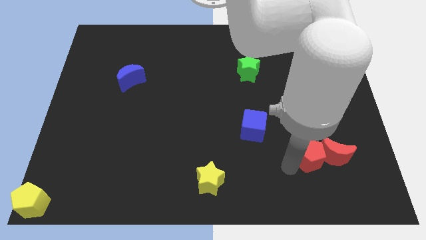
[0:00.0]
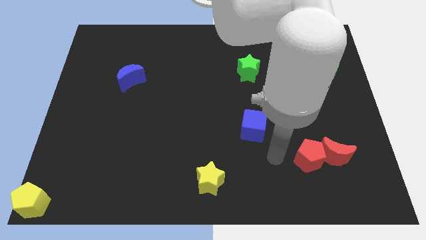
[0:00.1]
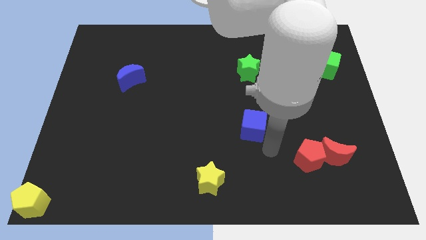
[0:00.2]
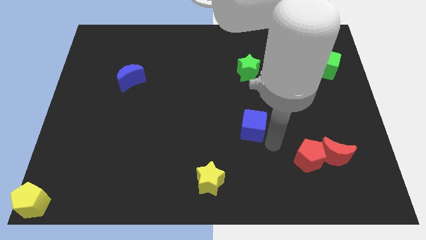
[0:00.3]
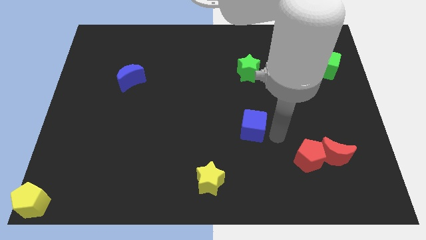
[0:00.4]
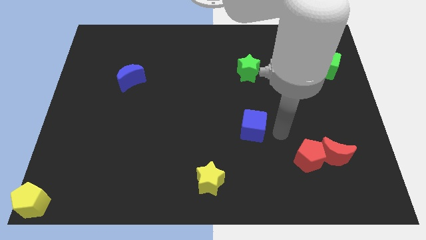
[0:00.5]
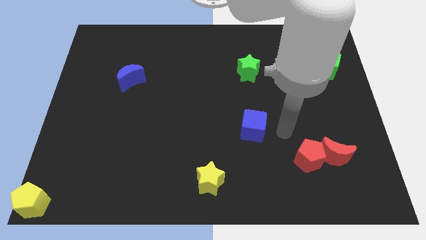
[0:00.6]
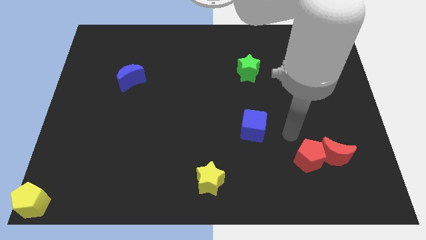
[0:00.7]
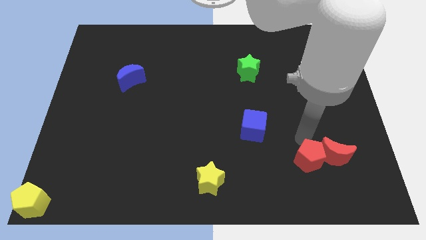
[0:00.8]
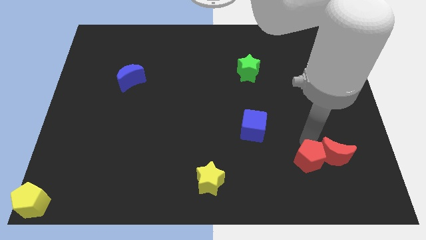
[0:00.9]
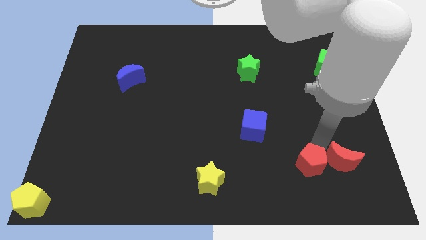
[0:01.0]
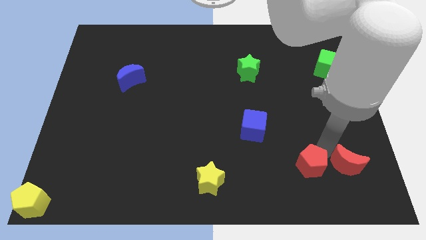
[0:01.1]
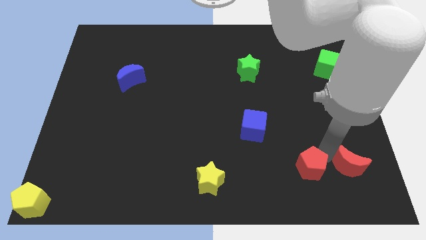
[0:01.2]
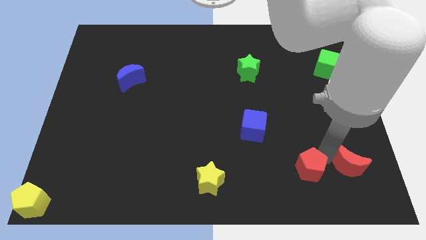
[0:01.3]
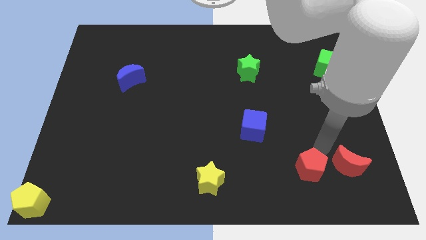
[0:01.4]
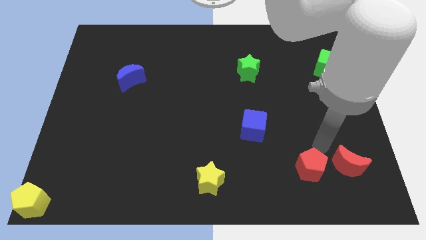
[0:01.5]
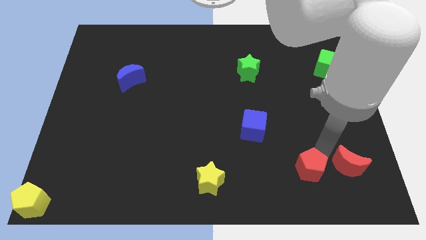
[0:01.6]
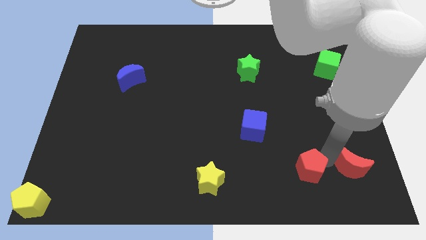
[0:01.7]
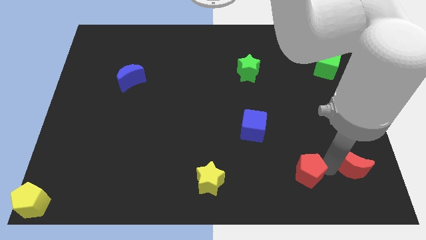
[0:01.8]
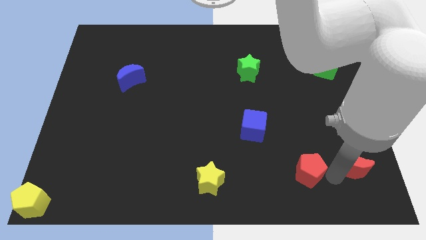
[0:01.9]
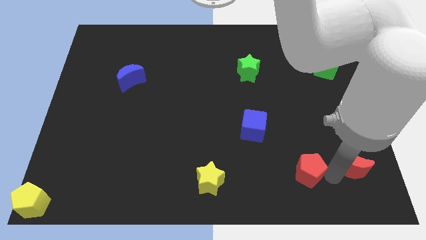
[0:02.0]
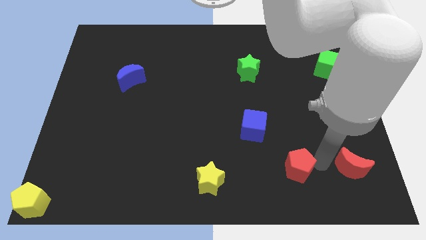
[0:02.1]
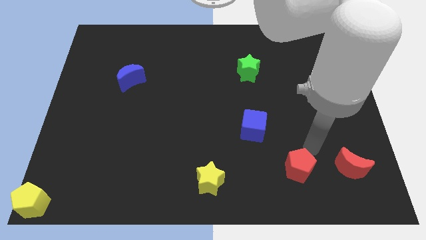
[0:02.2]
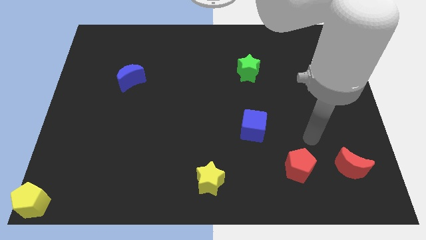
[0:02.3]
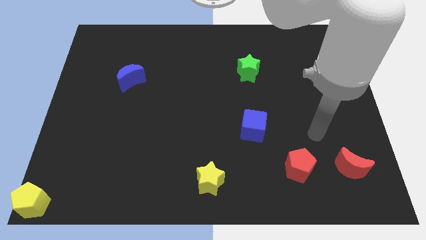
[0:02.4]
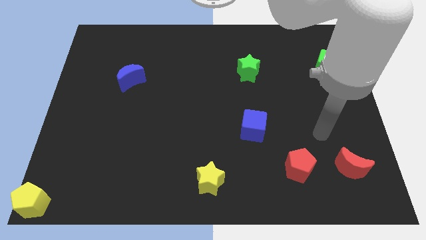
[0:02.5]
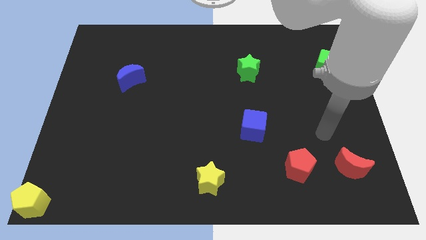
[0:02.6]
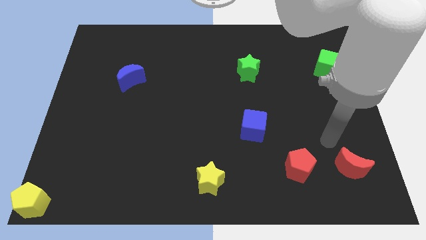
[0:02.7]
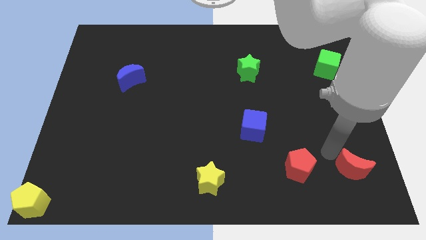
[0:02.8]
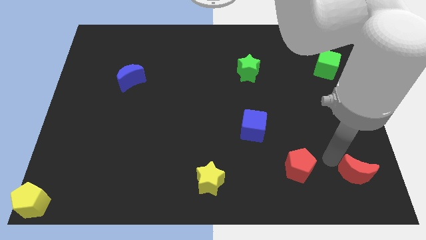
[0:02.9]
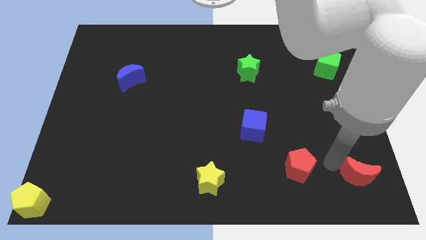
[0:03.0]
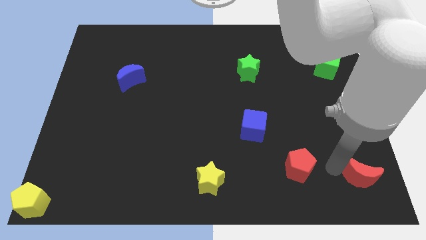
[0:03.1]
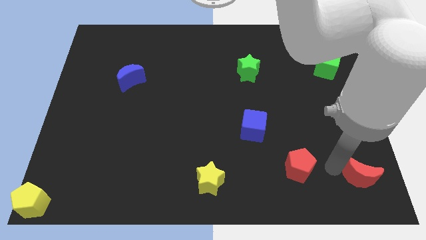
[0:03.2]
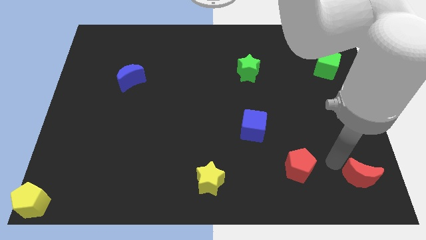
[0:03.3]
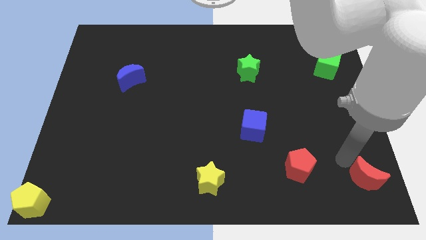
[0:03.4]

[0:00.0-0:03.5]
move red crescent away from the red pentagon

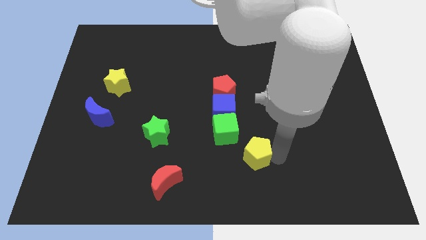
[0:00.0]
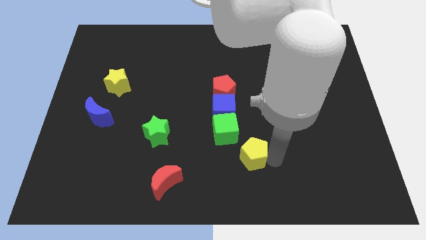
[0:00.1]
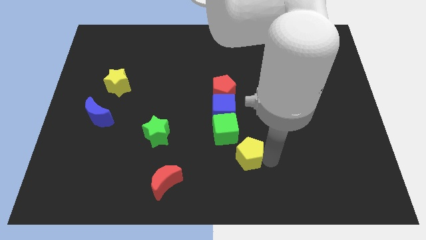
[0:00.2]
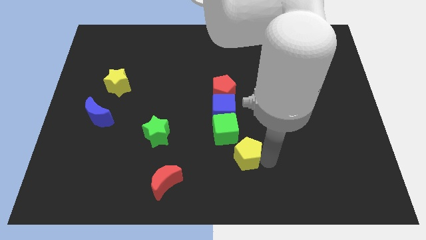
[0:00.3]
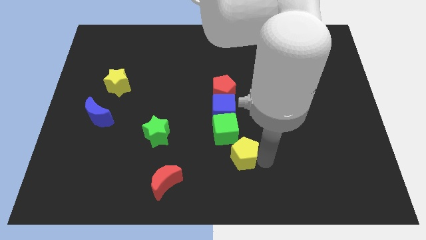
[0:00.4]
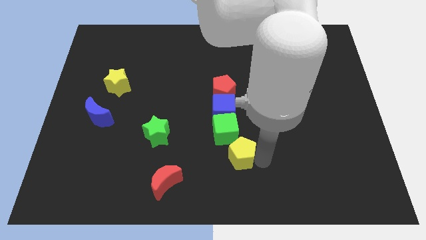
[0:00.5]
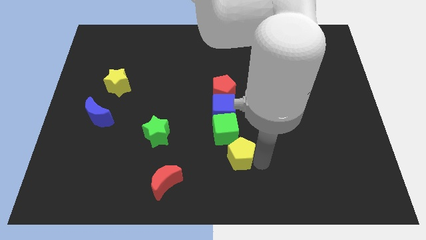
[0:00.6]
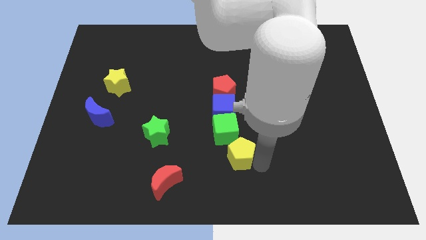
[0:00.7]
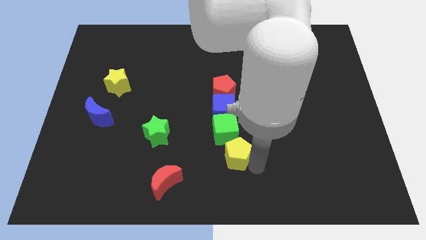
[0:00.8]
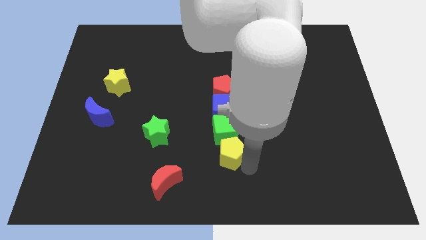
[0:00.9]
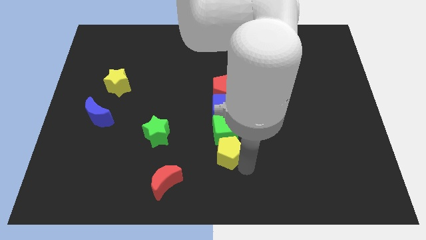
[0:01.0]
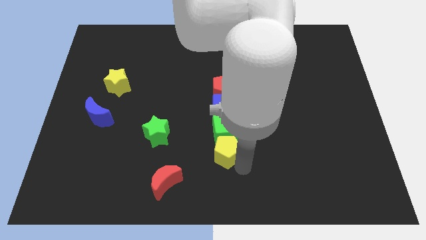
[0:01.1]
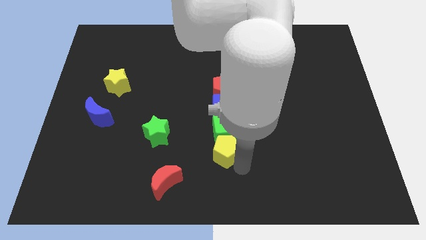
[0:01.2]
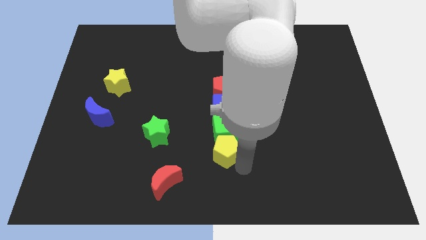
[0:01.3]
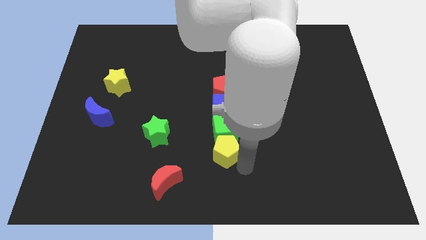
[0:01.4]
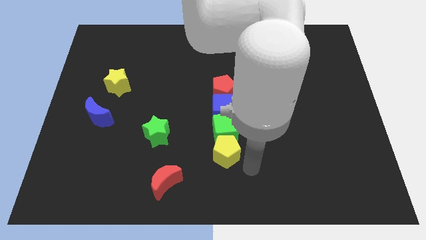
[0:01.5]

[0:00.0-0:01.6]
move the yellow pentagon close to the bottom of the green cube

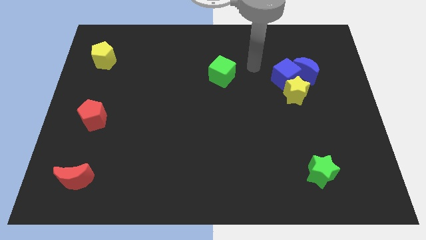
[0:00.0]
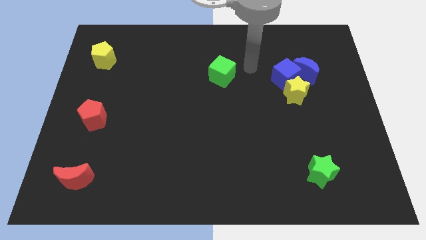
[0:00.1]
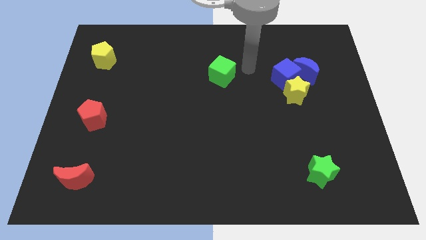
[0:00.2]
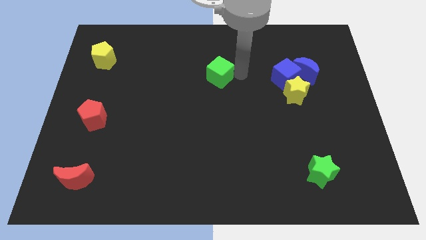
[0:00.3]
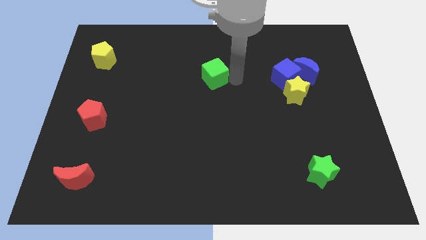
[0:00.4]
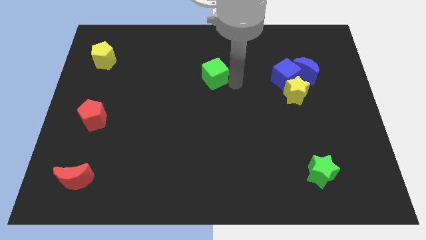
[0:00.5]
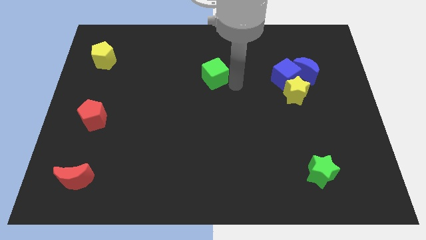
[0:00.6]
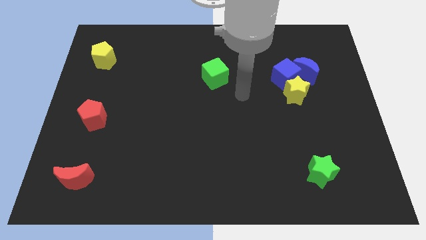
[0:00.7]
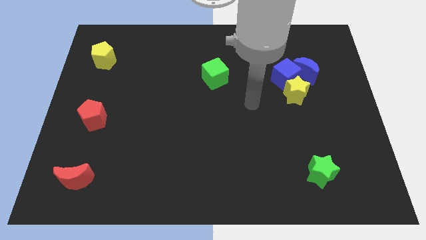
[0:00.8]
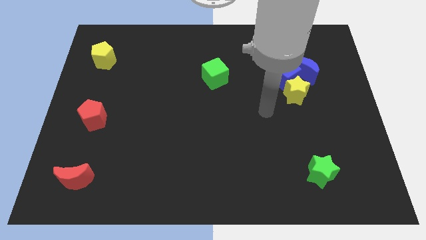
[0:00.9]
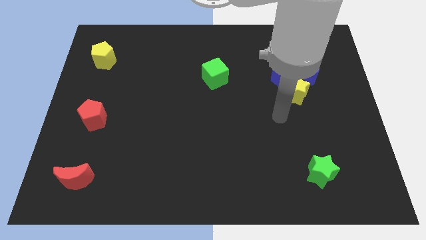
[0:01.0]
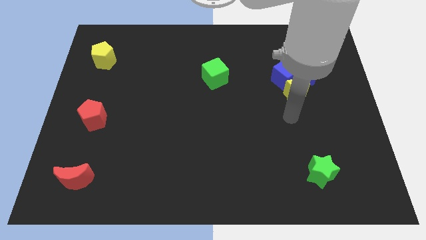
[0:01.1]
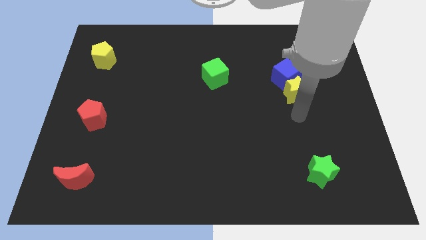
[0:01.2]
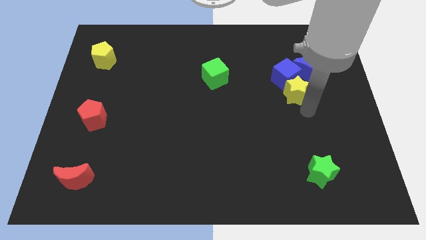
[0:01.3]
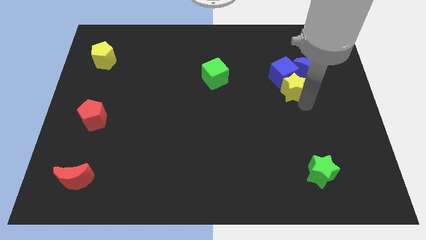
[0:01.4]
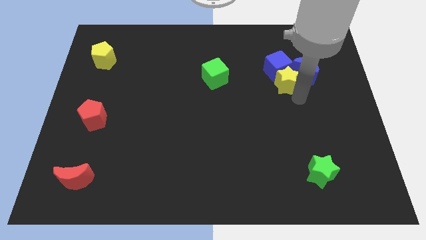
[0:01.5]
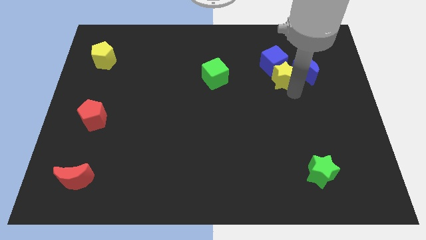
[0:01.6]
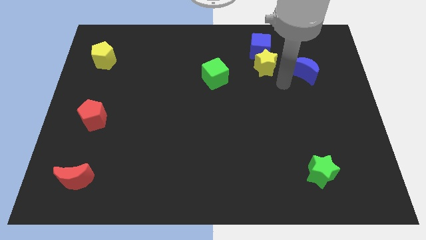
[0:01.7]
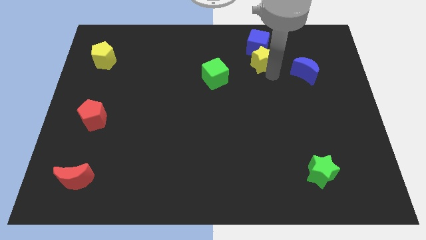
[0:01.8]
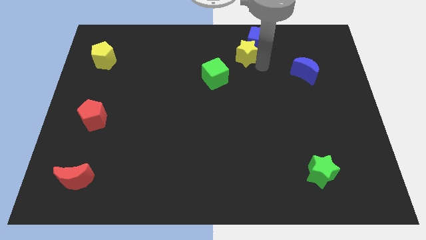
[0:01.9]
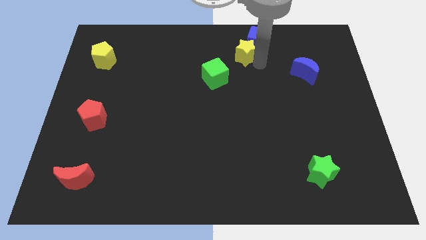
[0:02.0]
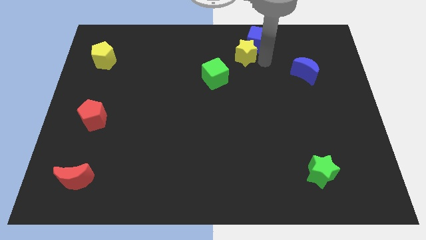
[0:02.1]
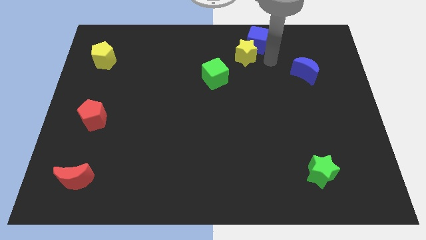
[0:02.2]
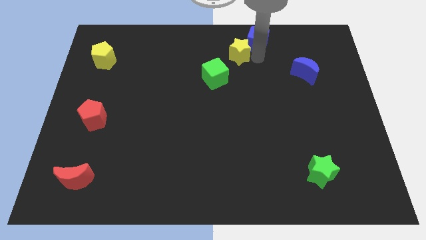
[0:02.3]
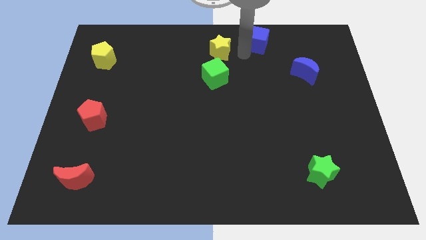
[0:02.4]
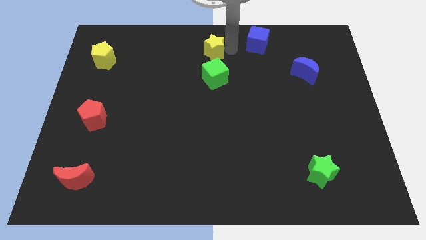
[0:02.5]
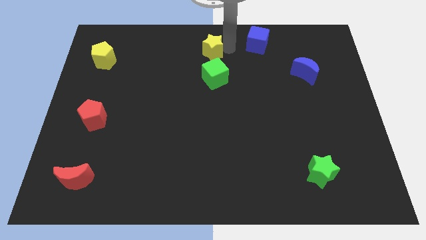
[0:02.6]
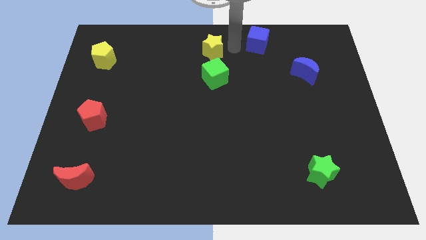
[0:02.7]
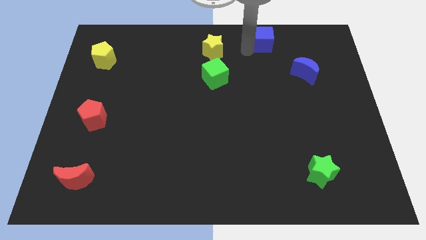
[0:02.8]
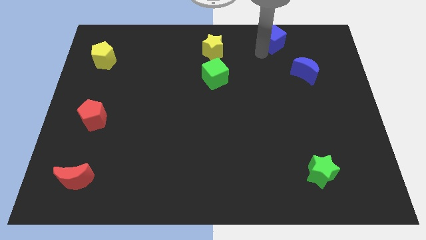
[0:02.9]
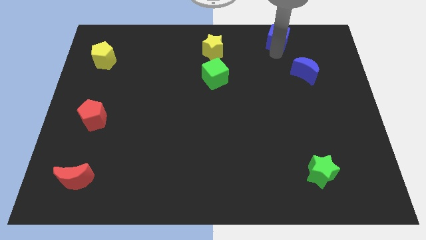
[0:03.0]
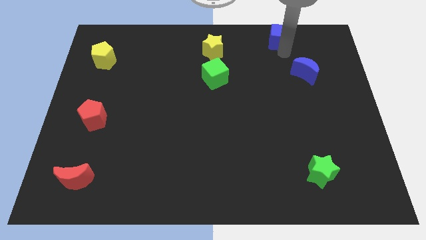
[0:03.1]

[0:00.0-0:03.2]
place the yellow star above green cube

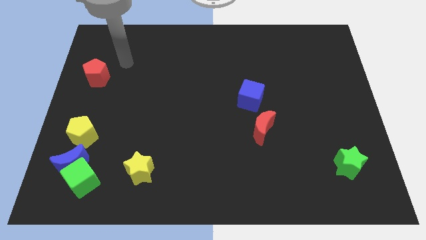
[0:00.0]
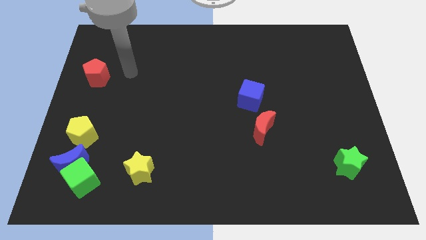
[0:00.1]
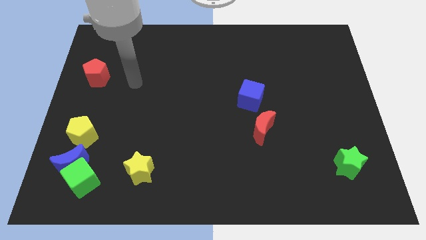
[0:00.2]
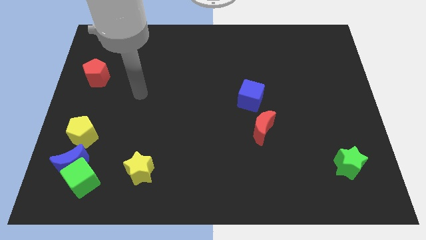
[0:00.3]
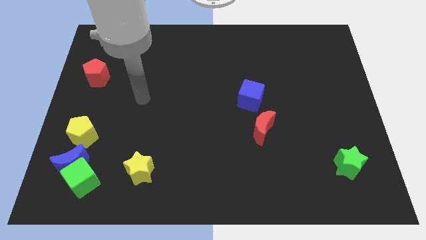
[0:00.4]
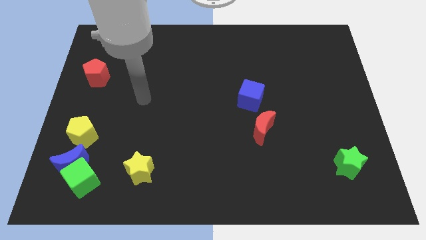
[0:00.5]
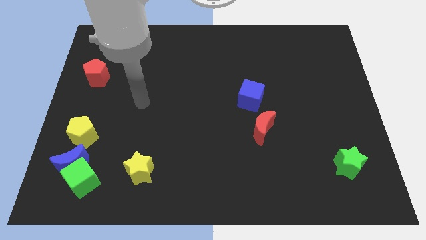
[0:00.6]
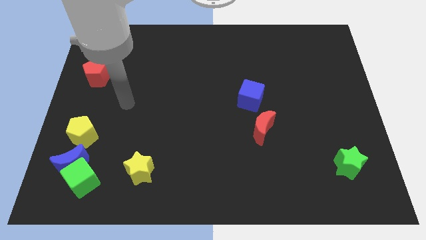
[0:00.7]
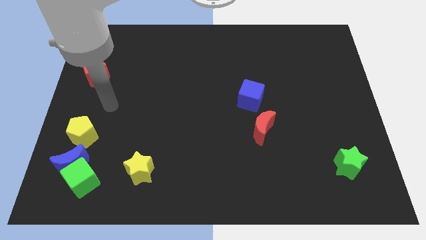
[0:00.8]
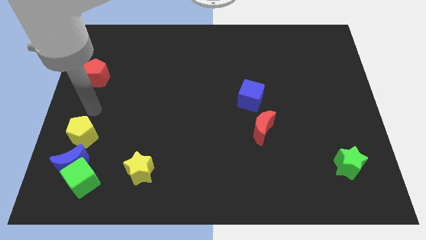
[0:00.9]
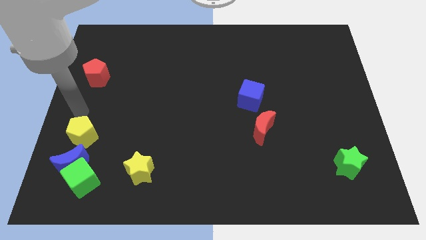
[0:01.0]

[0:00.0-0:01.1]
move your arm to the top of the yellow pentagon
